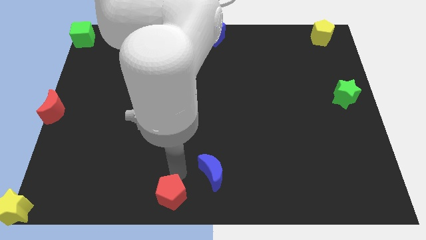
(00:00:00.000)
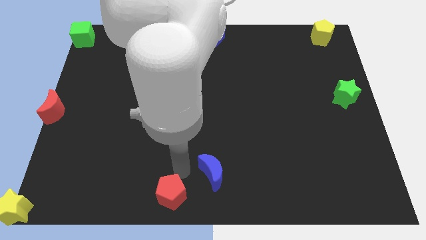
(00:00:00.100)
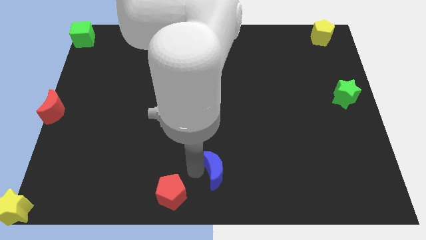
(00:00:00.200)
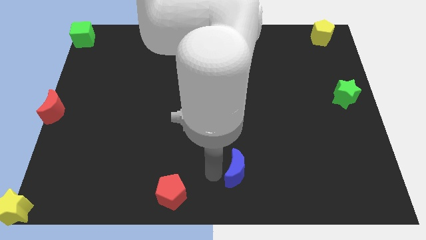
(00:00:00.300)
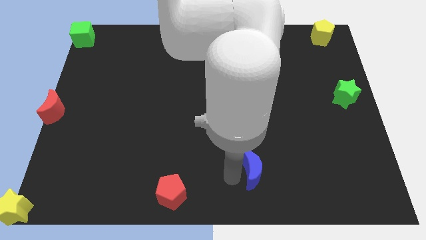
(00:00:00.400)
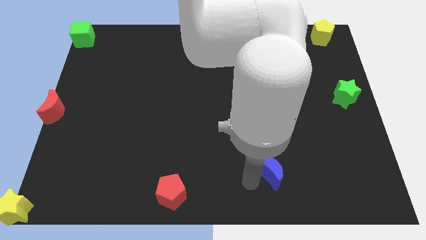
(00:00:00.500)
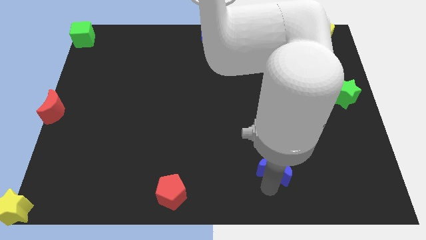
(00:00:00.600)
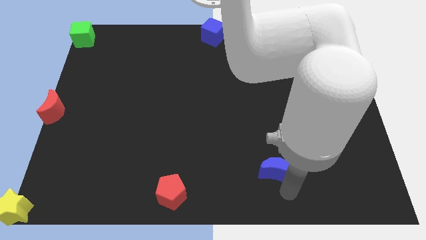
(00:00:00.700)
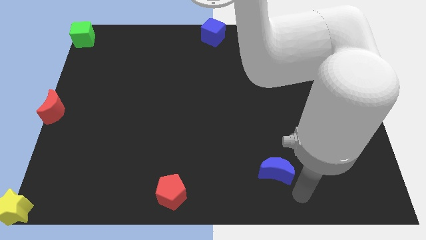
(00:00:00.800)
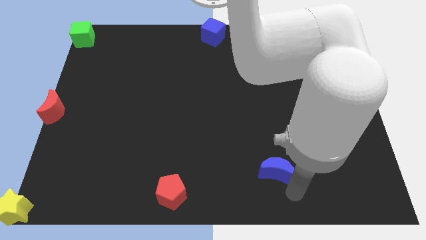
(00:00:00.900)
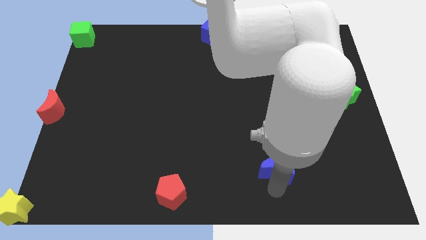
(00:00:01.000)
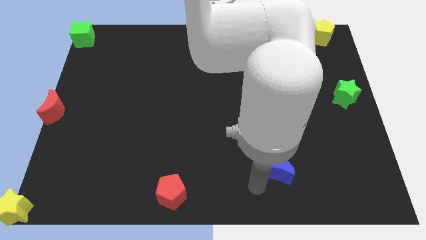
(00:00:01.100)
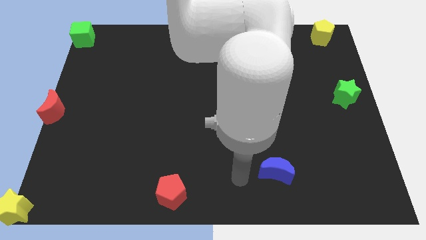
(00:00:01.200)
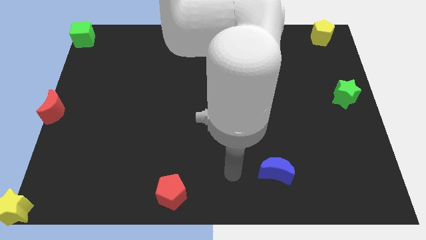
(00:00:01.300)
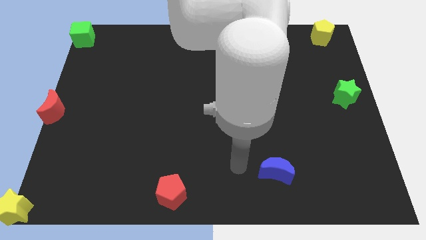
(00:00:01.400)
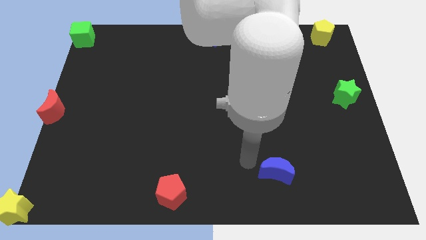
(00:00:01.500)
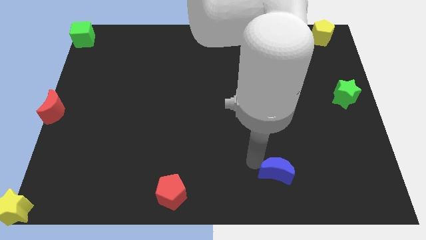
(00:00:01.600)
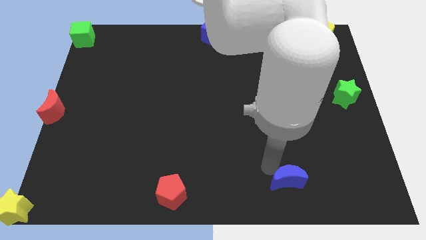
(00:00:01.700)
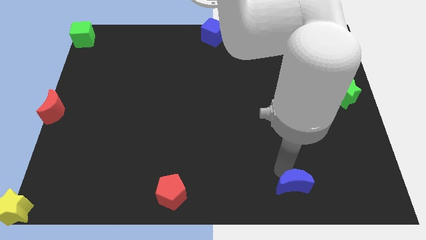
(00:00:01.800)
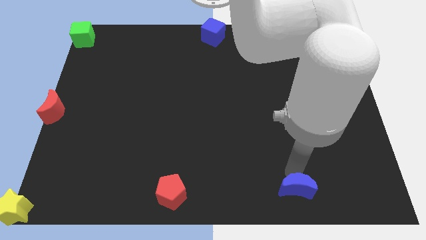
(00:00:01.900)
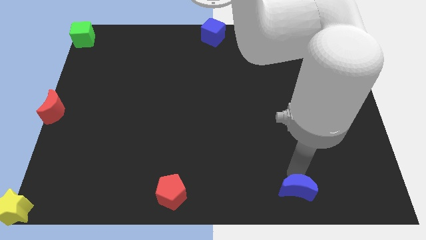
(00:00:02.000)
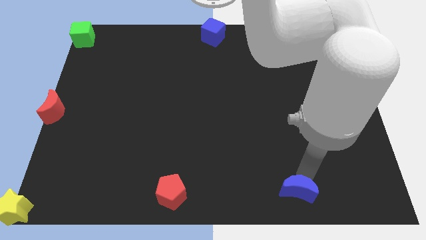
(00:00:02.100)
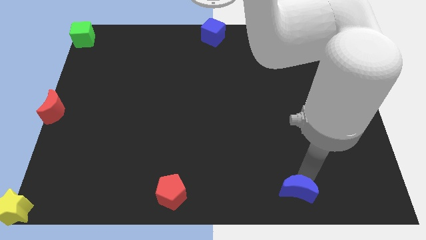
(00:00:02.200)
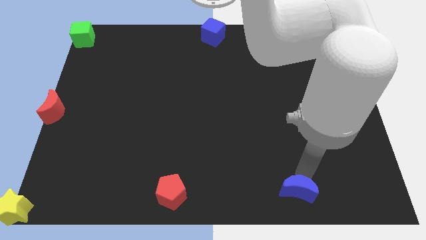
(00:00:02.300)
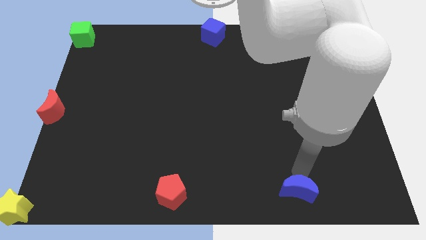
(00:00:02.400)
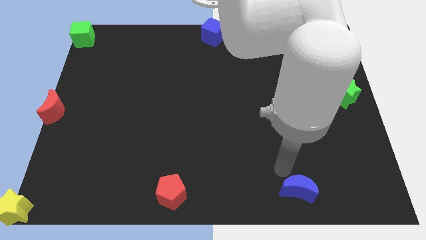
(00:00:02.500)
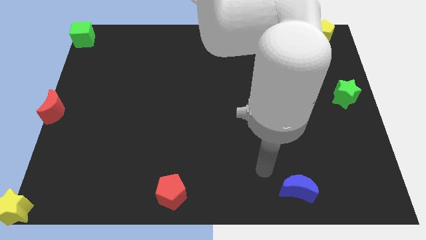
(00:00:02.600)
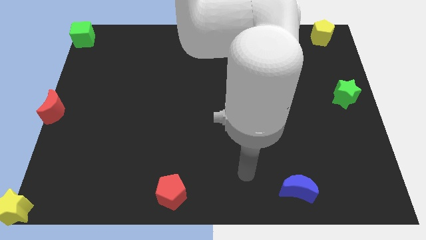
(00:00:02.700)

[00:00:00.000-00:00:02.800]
push the blue crescent parallel to the red pentagon

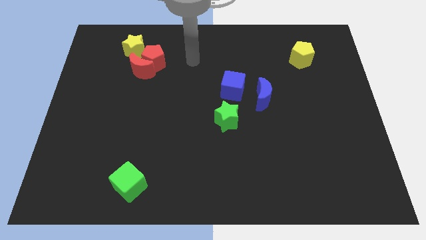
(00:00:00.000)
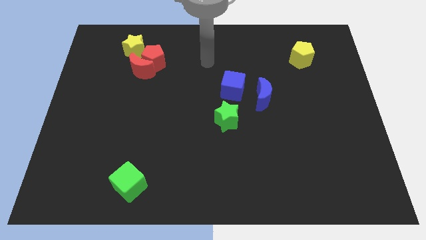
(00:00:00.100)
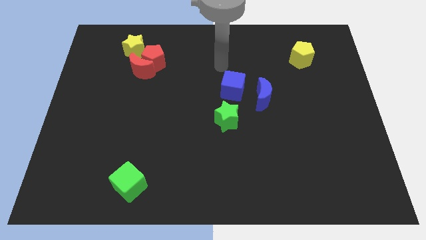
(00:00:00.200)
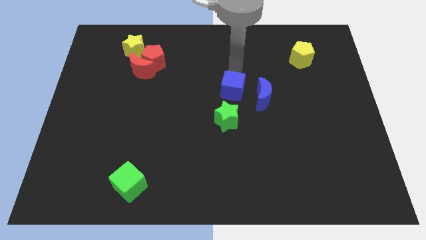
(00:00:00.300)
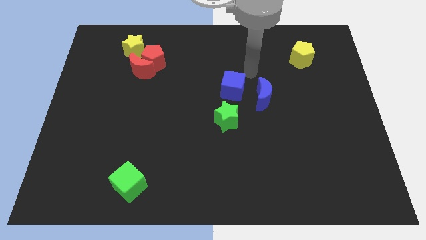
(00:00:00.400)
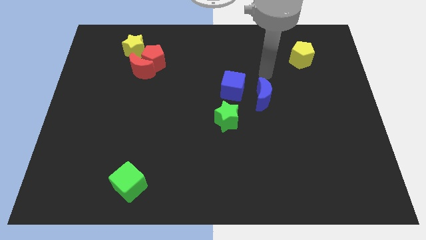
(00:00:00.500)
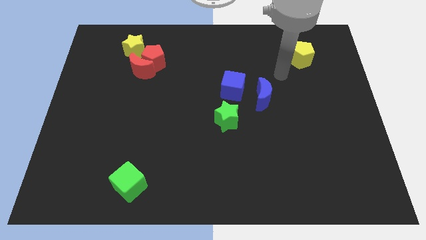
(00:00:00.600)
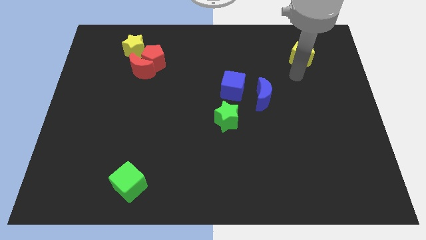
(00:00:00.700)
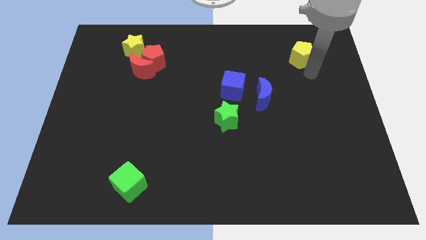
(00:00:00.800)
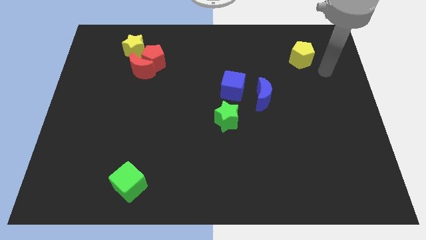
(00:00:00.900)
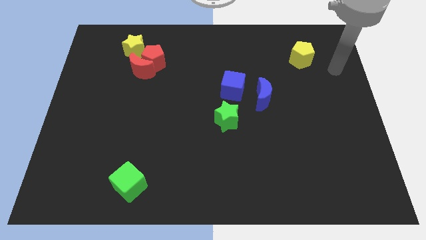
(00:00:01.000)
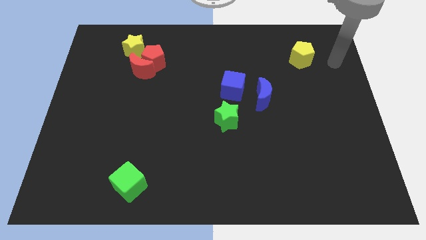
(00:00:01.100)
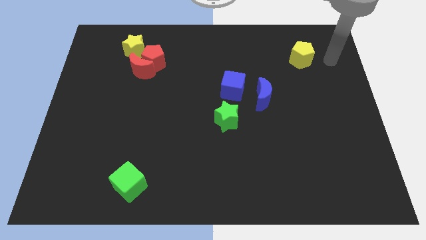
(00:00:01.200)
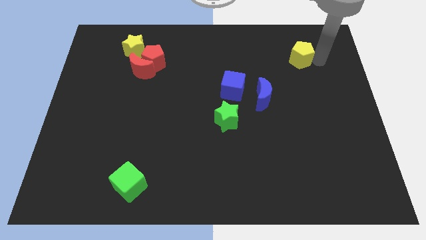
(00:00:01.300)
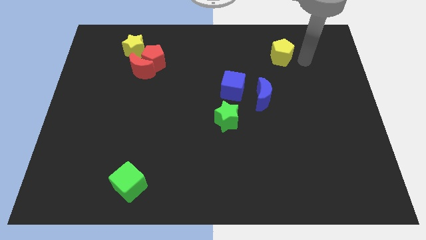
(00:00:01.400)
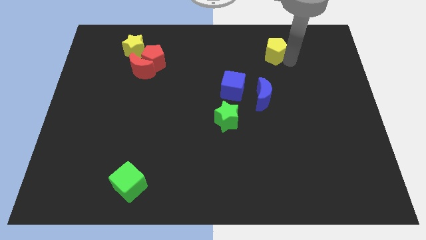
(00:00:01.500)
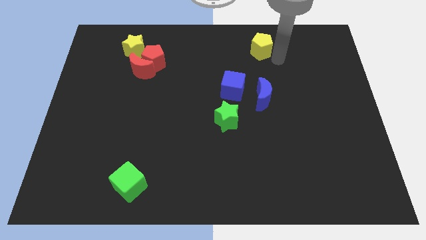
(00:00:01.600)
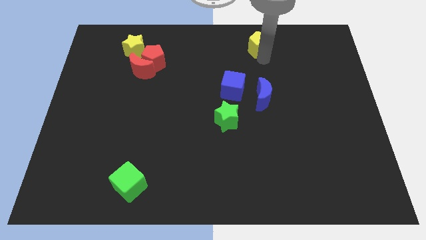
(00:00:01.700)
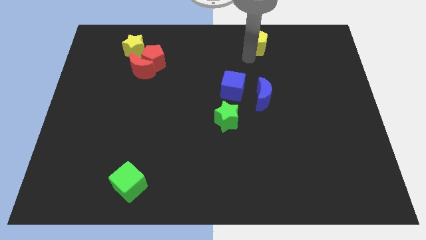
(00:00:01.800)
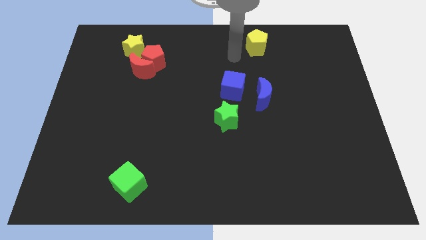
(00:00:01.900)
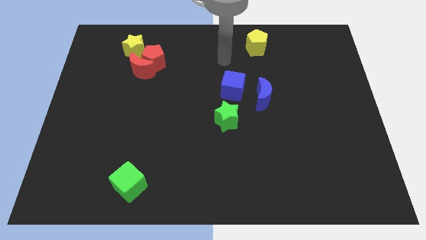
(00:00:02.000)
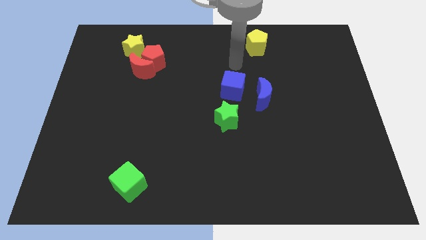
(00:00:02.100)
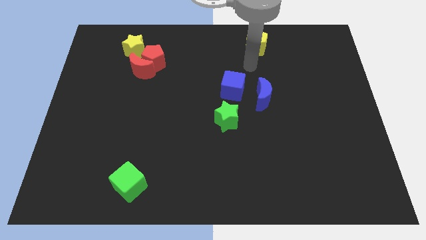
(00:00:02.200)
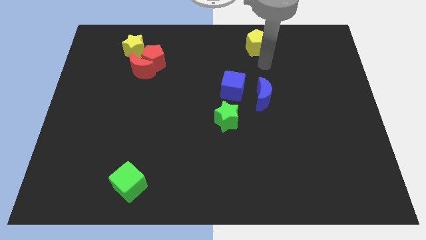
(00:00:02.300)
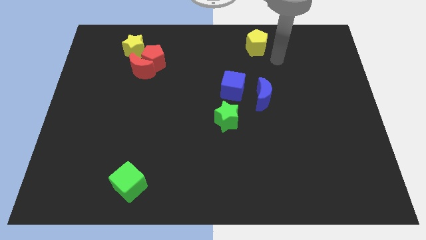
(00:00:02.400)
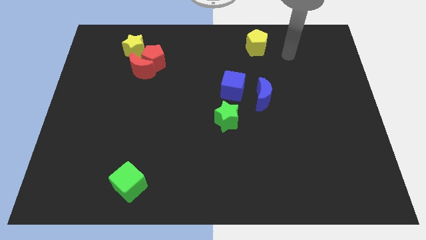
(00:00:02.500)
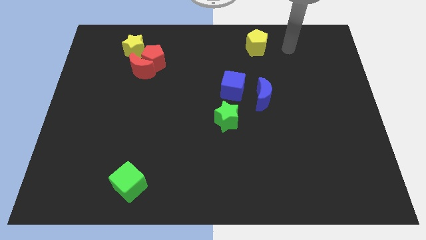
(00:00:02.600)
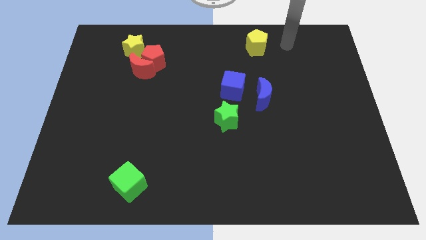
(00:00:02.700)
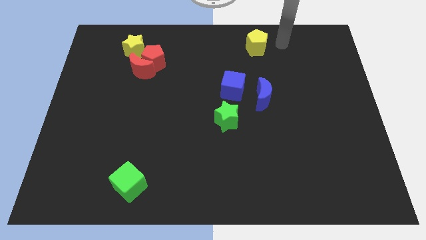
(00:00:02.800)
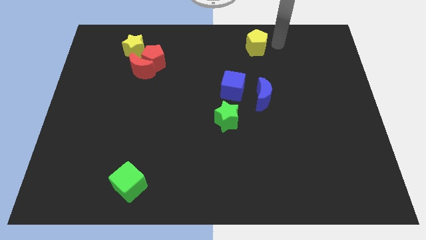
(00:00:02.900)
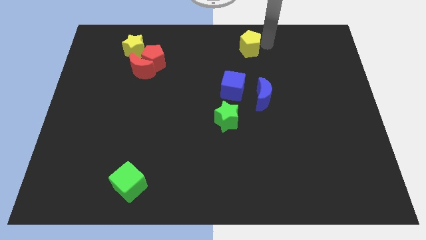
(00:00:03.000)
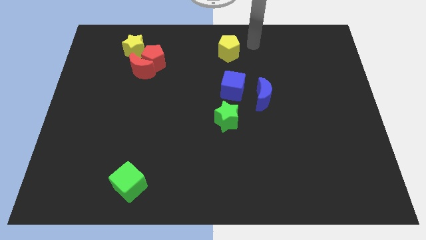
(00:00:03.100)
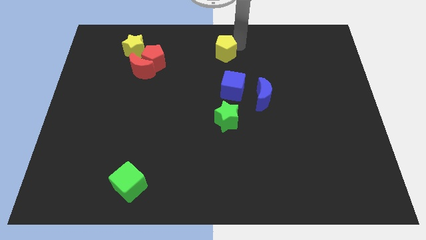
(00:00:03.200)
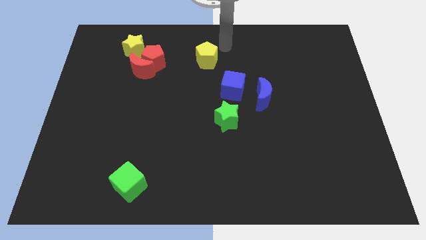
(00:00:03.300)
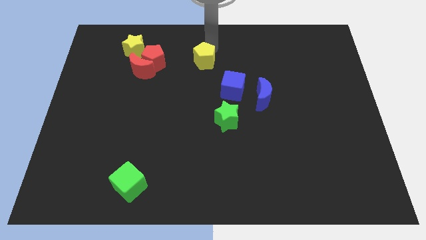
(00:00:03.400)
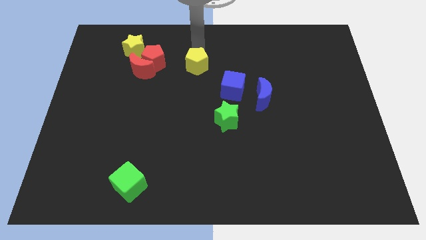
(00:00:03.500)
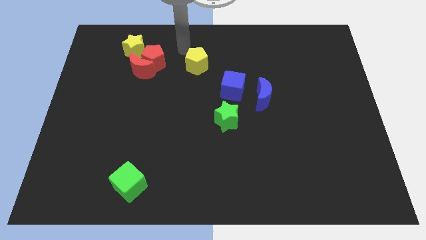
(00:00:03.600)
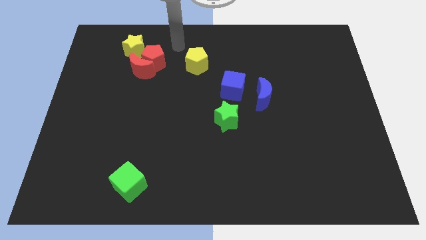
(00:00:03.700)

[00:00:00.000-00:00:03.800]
put the yellow pentagon at the right side of the red pentagon

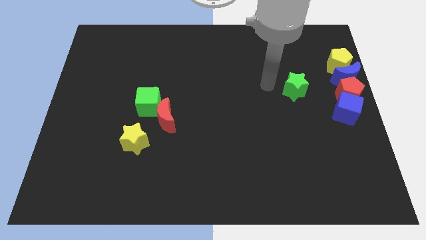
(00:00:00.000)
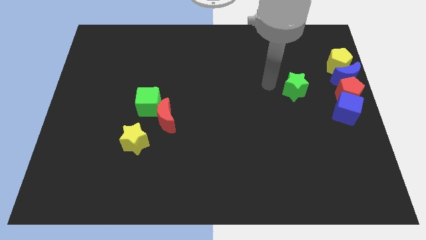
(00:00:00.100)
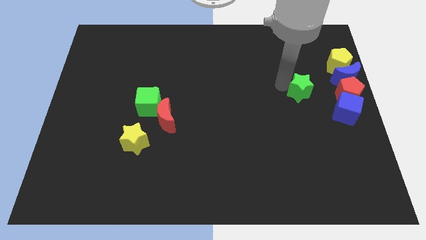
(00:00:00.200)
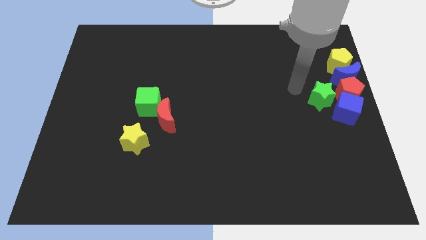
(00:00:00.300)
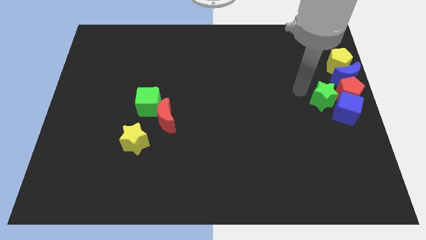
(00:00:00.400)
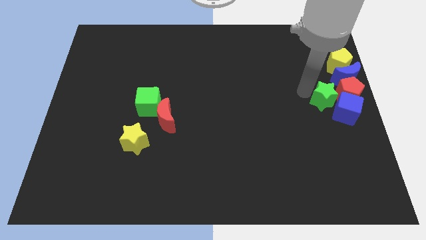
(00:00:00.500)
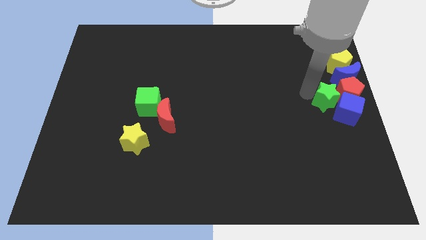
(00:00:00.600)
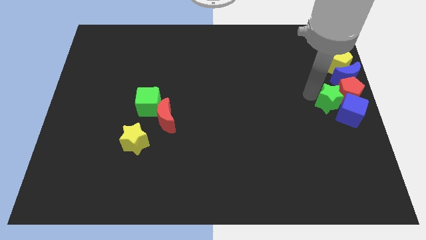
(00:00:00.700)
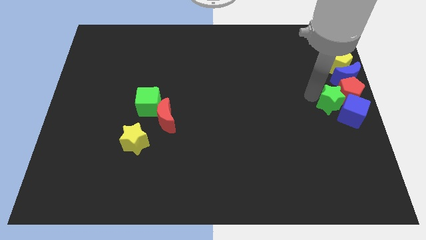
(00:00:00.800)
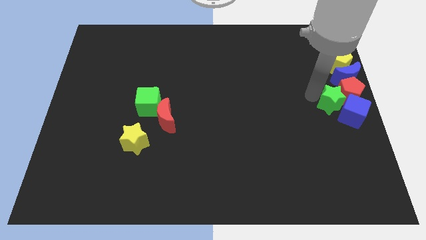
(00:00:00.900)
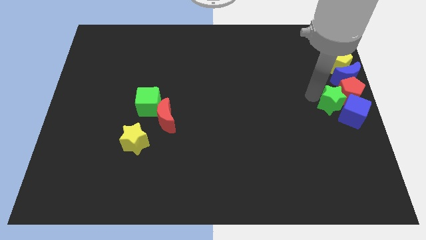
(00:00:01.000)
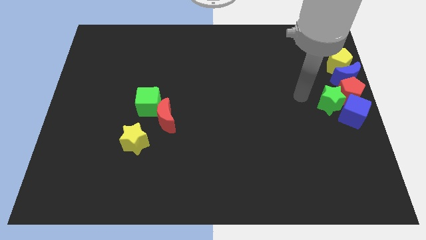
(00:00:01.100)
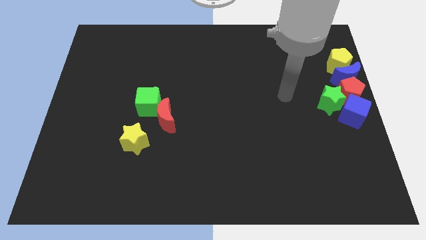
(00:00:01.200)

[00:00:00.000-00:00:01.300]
push the green star into the blue cube

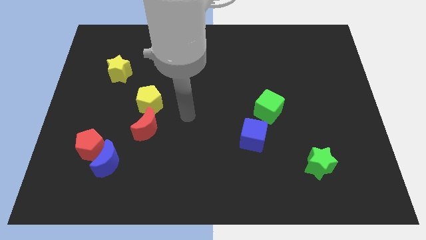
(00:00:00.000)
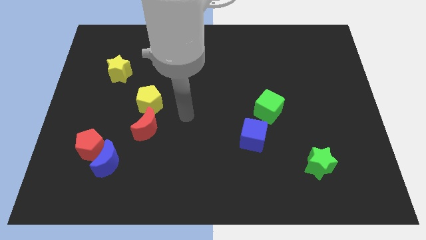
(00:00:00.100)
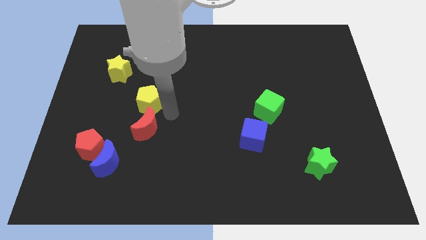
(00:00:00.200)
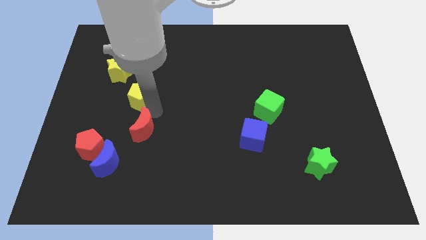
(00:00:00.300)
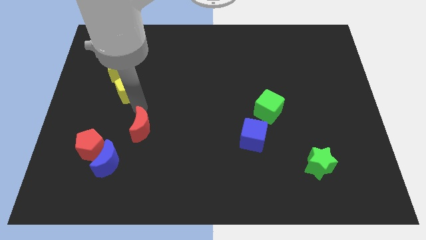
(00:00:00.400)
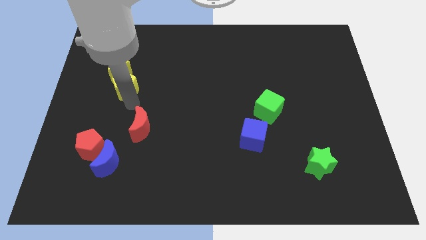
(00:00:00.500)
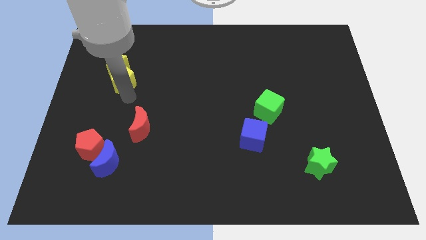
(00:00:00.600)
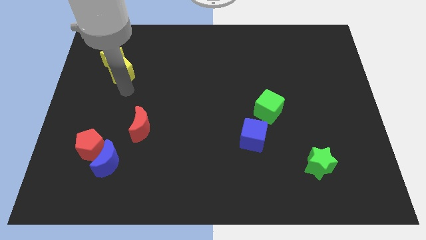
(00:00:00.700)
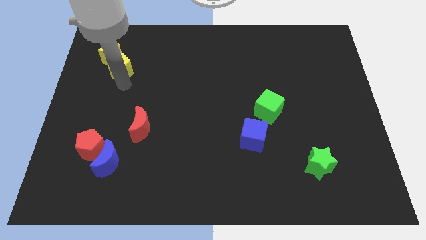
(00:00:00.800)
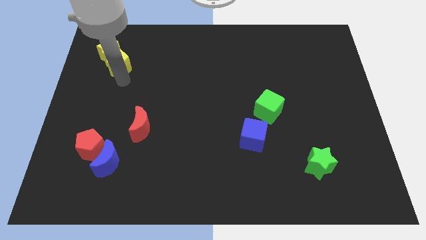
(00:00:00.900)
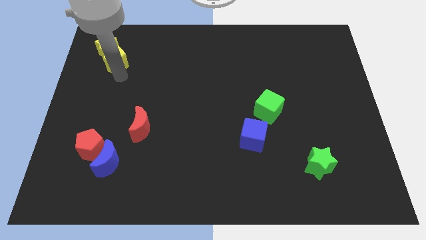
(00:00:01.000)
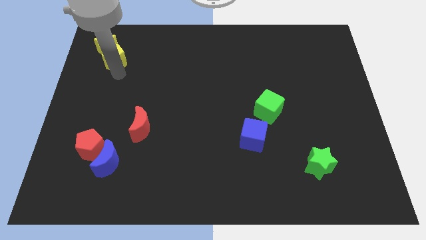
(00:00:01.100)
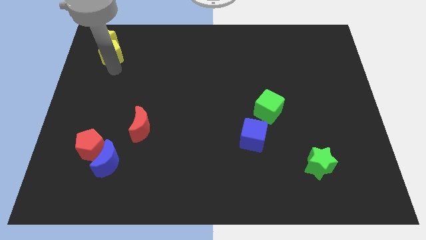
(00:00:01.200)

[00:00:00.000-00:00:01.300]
push the yellow pentagon into the yellow star
